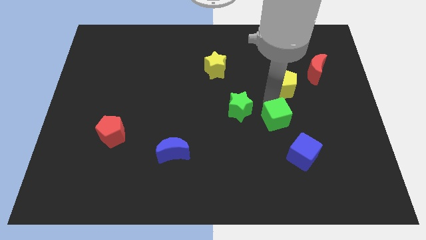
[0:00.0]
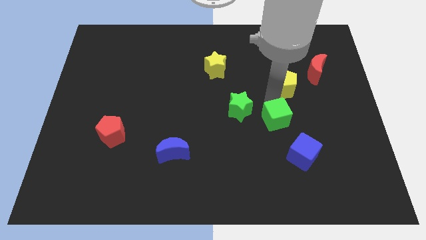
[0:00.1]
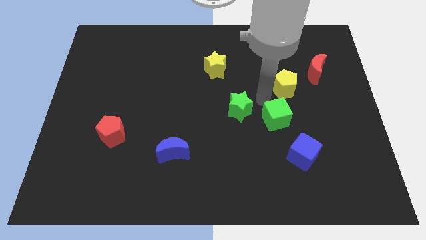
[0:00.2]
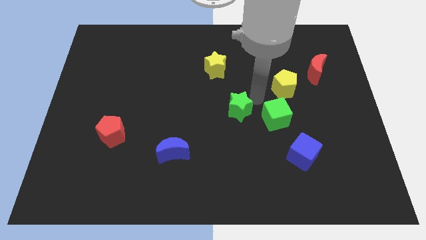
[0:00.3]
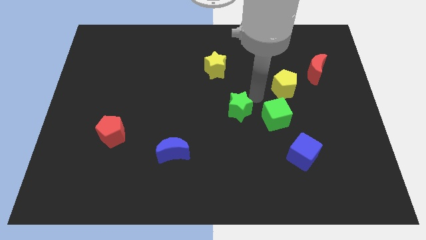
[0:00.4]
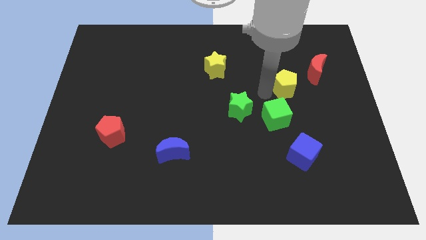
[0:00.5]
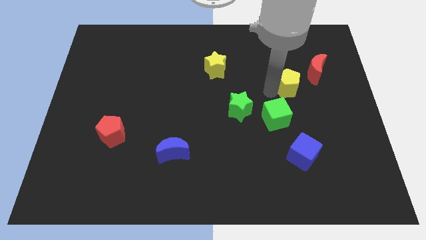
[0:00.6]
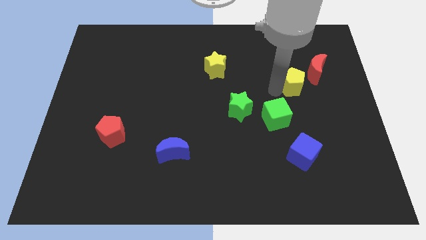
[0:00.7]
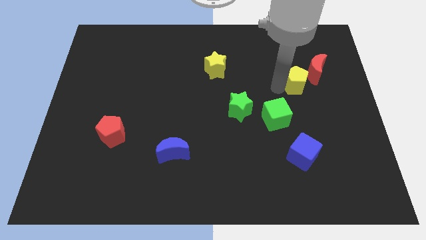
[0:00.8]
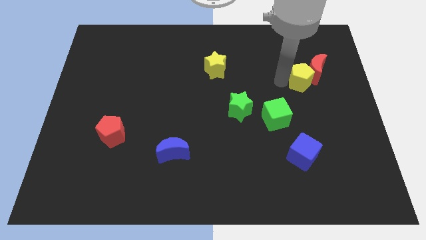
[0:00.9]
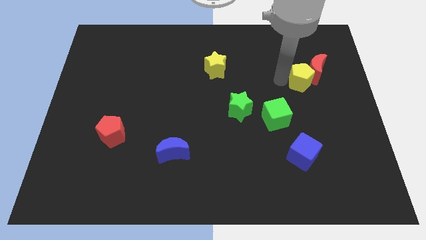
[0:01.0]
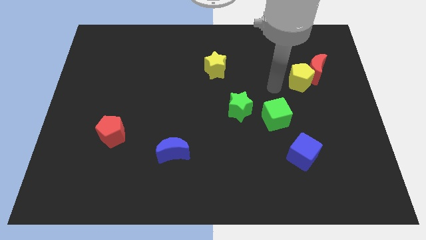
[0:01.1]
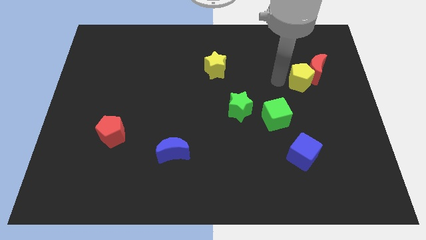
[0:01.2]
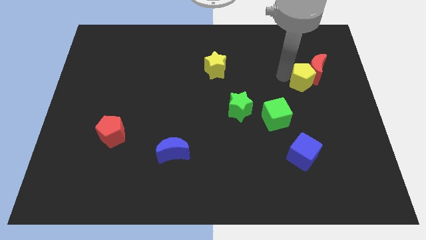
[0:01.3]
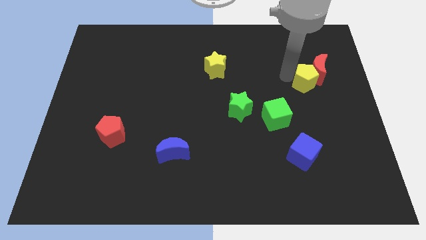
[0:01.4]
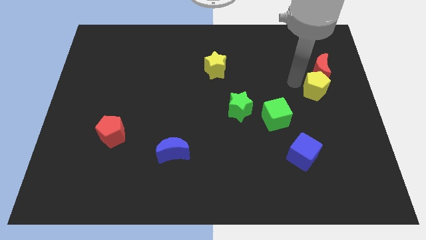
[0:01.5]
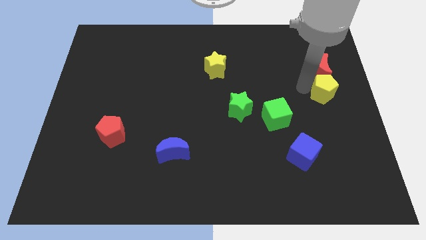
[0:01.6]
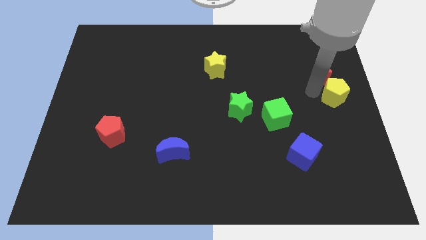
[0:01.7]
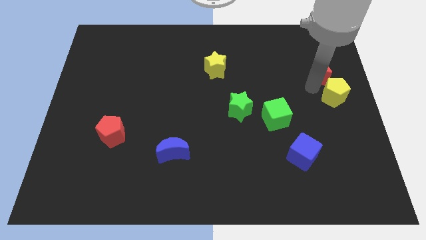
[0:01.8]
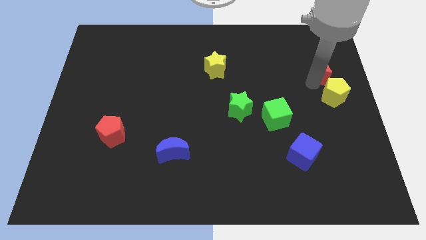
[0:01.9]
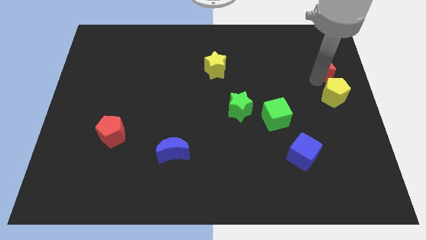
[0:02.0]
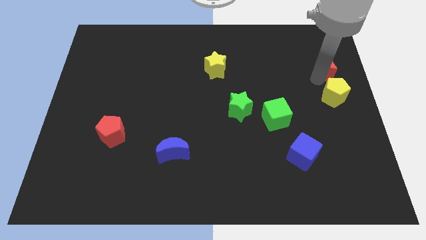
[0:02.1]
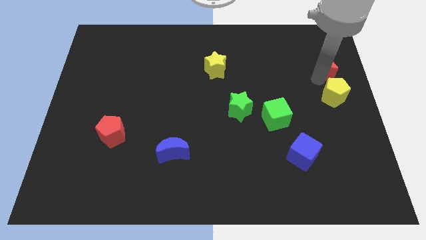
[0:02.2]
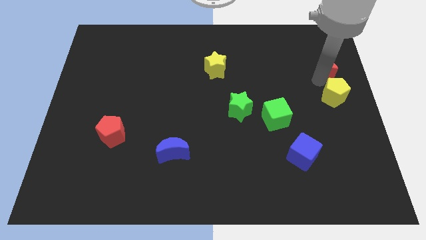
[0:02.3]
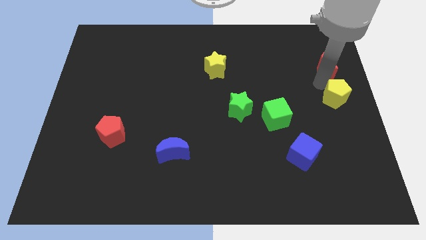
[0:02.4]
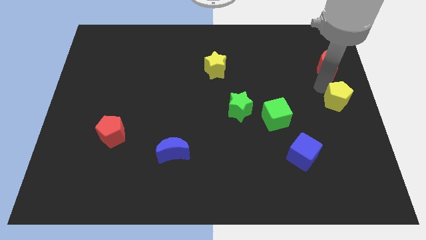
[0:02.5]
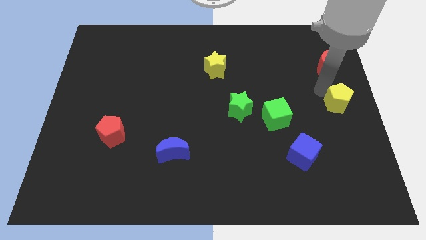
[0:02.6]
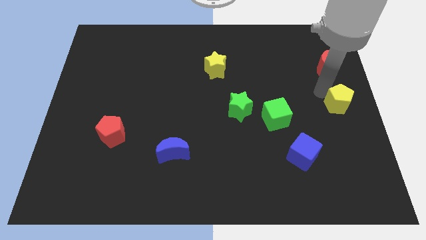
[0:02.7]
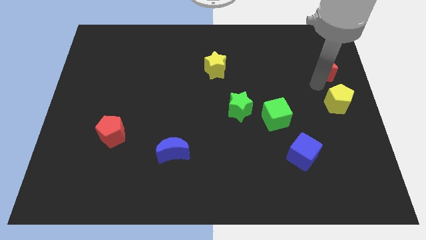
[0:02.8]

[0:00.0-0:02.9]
place the yellow pentagon at the center right side of the board

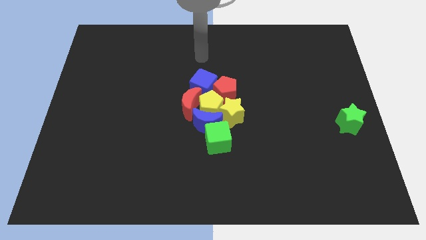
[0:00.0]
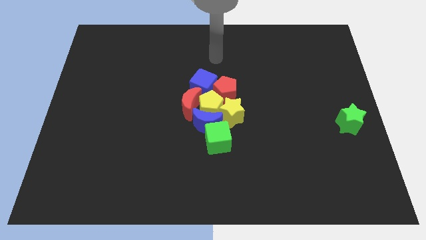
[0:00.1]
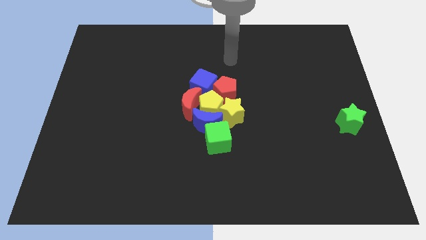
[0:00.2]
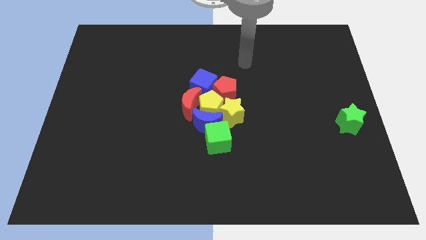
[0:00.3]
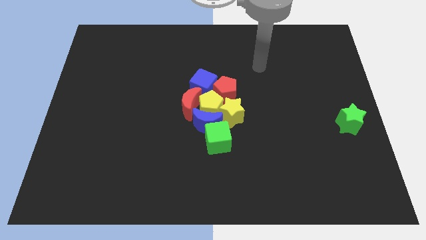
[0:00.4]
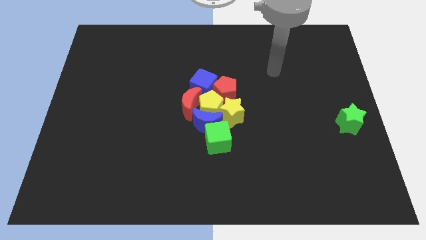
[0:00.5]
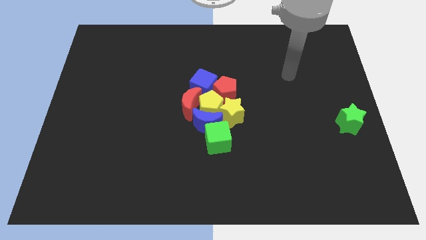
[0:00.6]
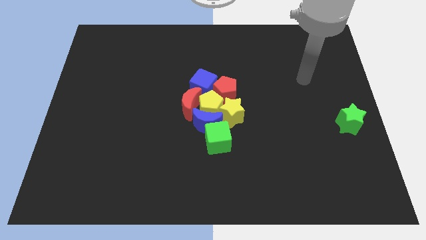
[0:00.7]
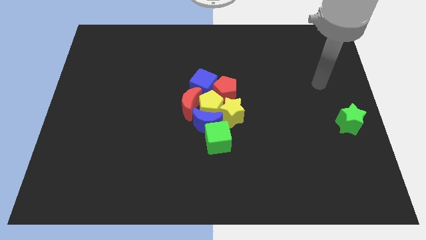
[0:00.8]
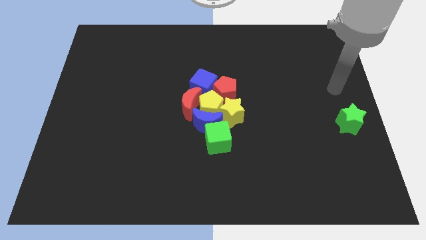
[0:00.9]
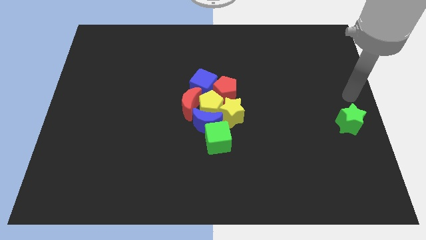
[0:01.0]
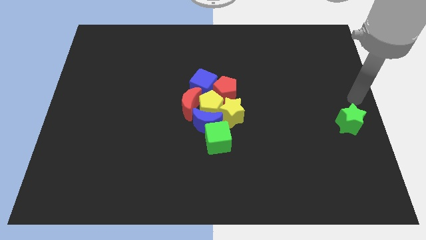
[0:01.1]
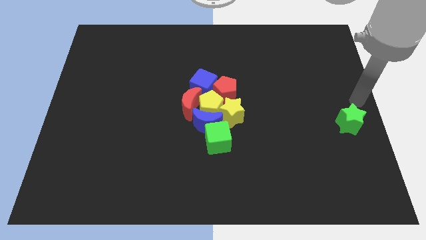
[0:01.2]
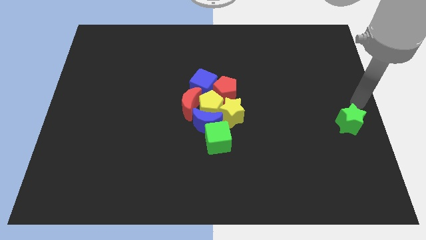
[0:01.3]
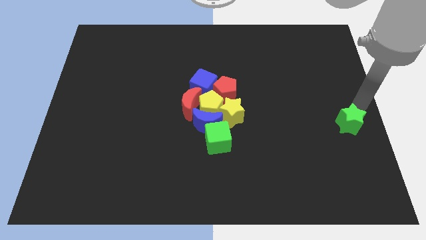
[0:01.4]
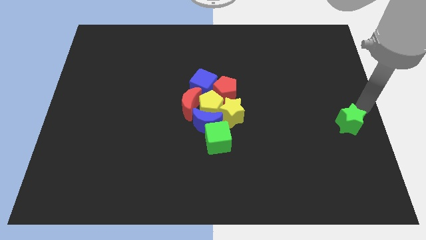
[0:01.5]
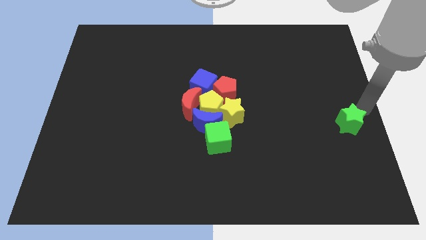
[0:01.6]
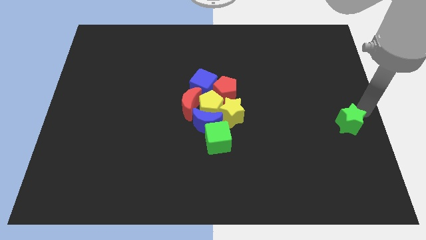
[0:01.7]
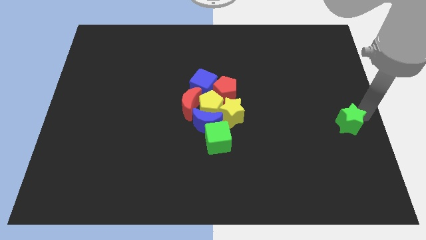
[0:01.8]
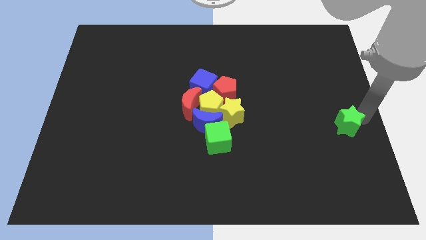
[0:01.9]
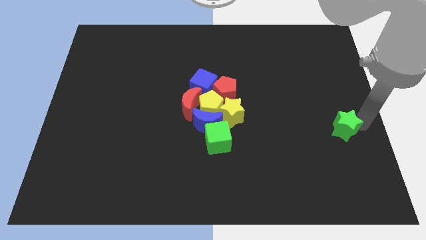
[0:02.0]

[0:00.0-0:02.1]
touch the right side of the green star

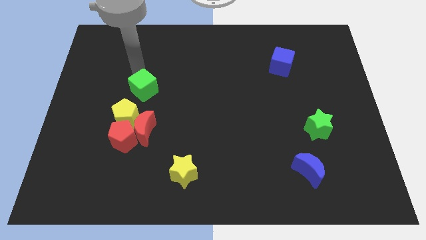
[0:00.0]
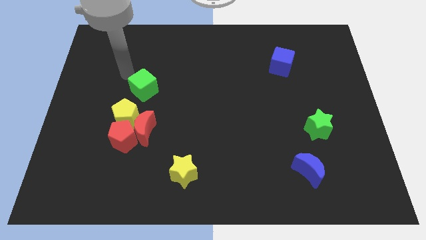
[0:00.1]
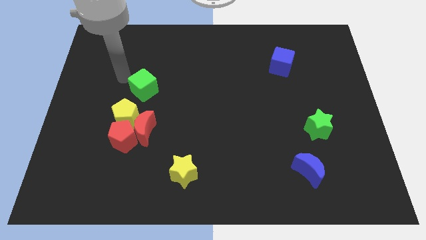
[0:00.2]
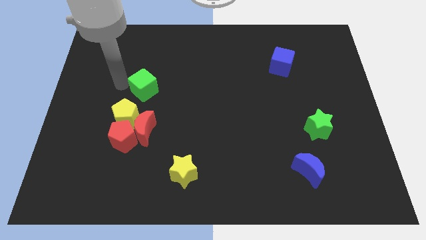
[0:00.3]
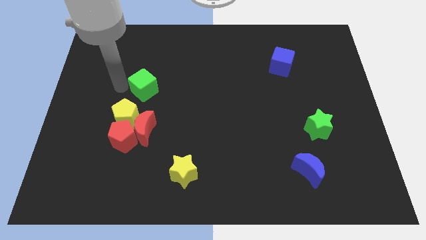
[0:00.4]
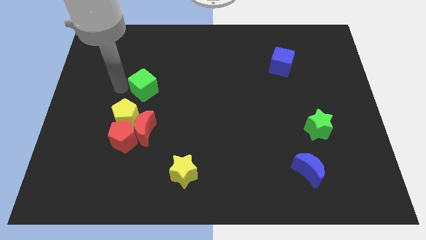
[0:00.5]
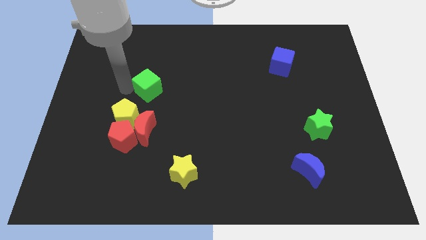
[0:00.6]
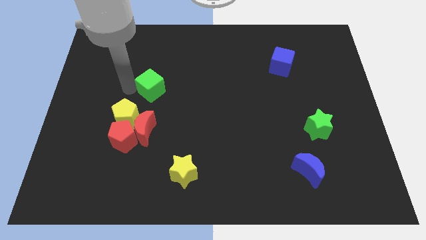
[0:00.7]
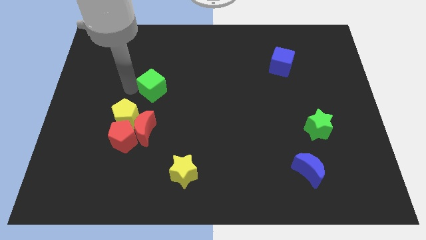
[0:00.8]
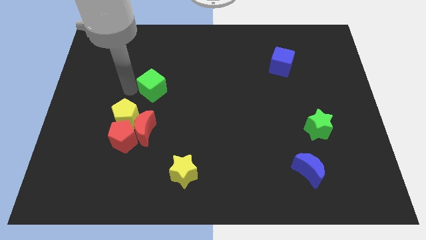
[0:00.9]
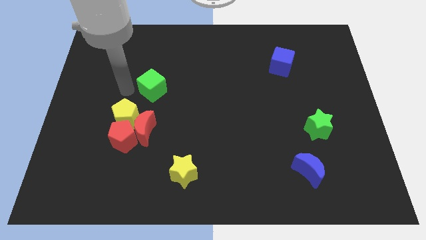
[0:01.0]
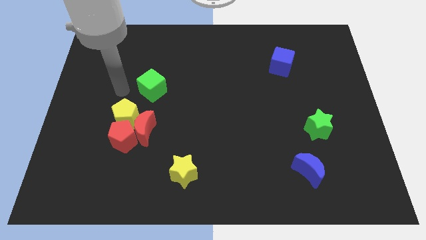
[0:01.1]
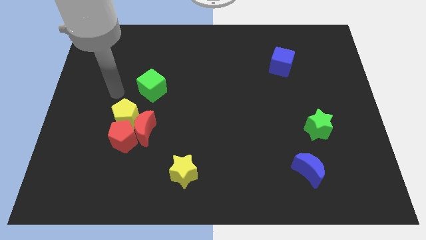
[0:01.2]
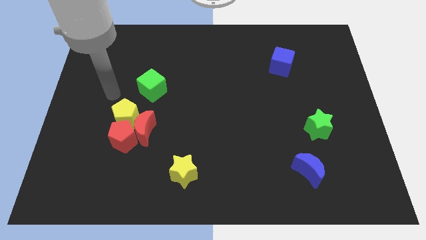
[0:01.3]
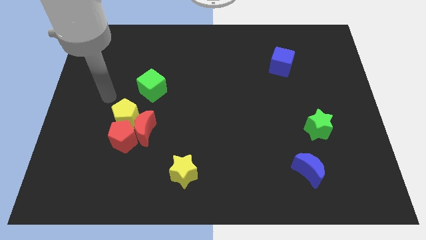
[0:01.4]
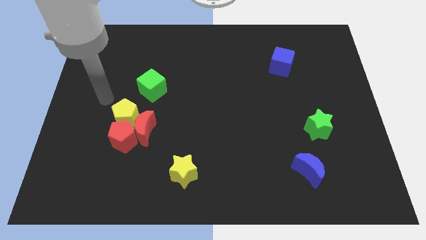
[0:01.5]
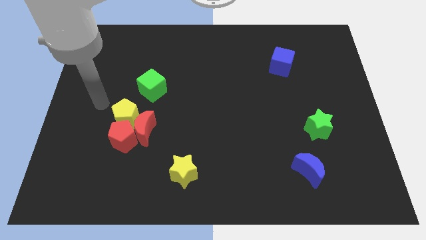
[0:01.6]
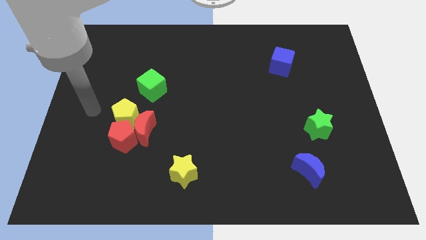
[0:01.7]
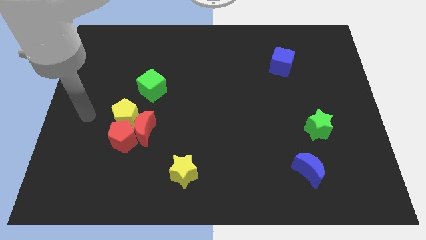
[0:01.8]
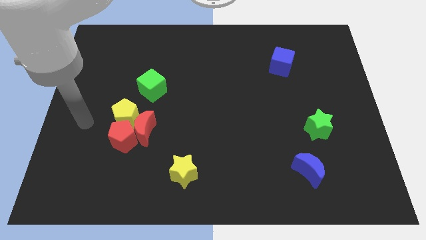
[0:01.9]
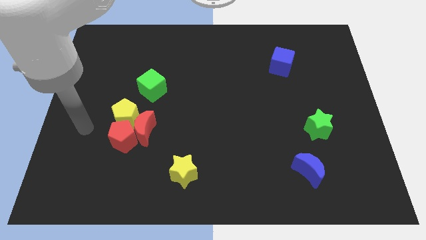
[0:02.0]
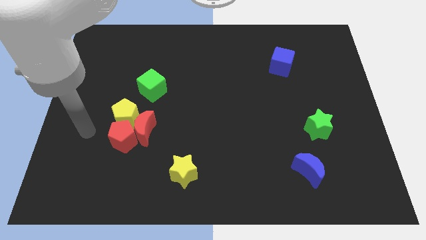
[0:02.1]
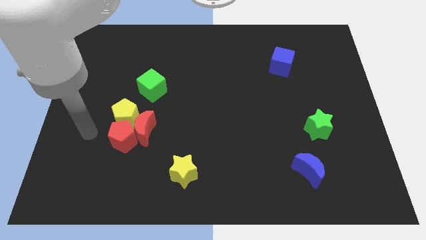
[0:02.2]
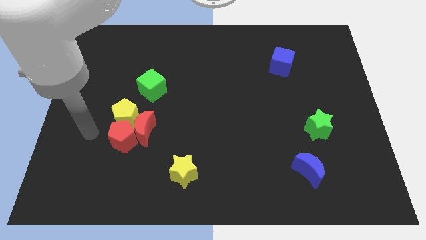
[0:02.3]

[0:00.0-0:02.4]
slightly move the green cube to the right side of the board

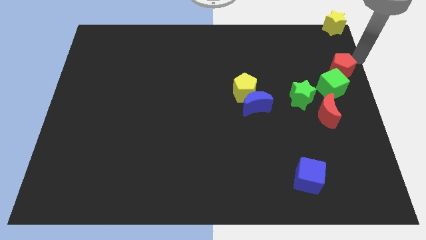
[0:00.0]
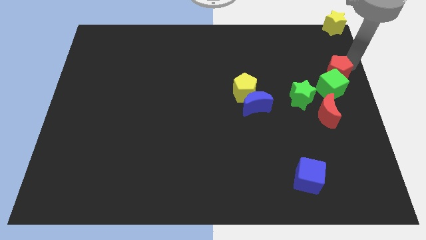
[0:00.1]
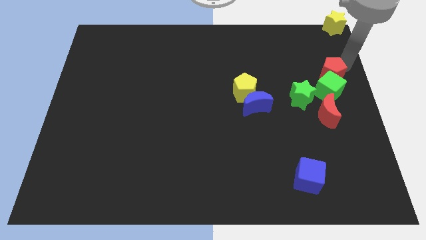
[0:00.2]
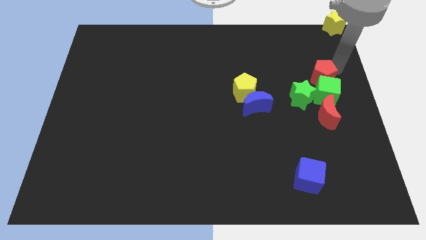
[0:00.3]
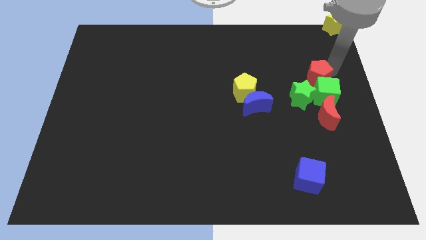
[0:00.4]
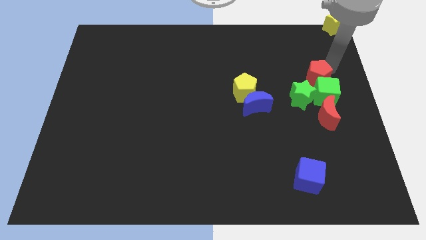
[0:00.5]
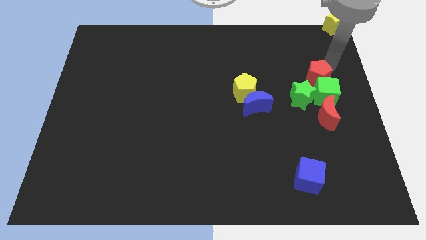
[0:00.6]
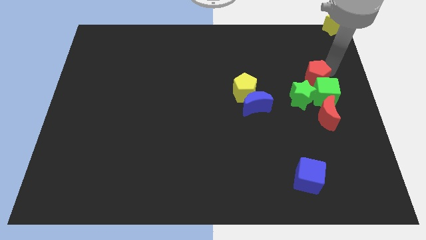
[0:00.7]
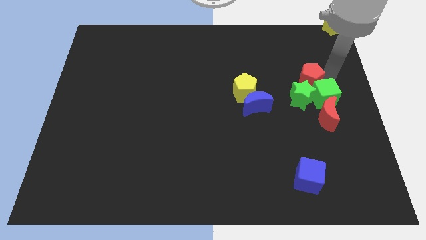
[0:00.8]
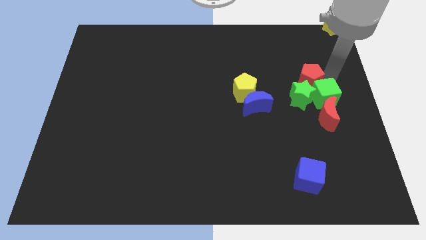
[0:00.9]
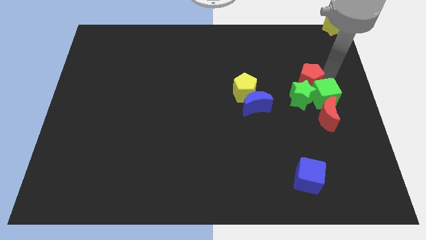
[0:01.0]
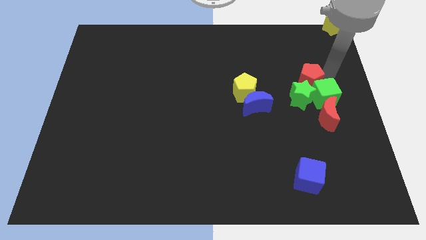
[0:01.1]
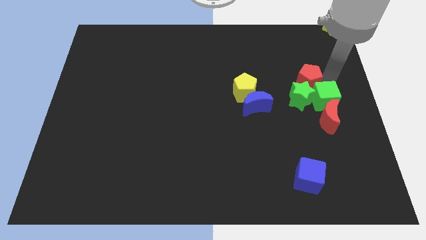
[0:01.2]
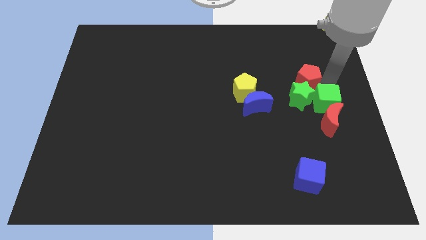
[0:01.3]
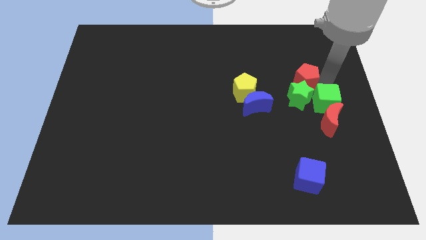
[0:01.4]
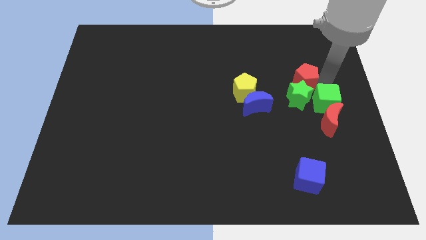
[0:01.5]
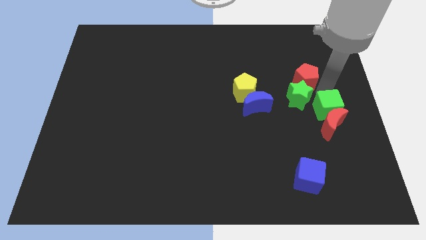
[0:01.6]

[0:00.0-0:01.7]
push green blocks with red pentagon
